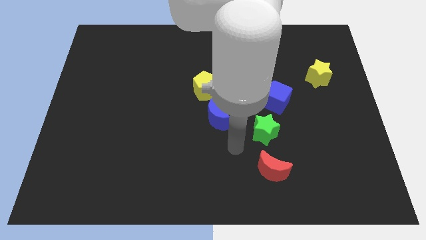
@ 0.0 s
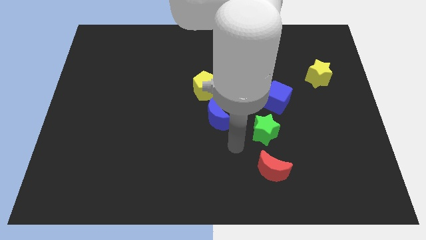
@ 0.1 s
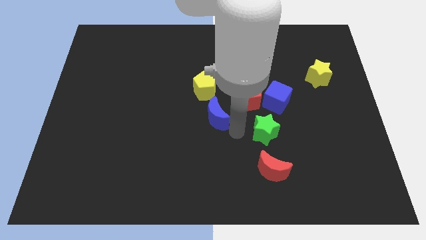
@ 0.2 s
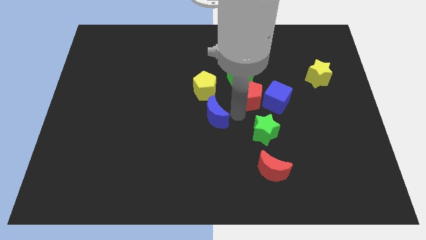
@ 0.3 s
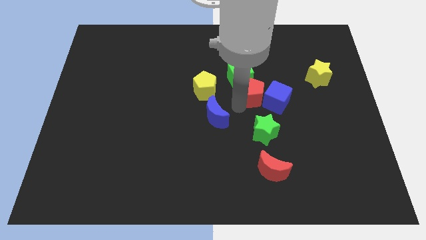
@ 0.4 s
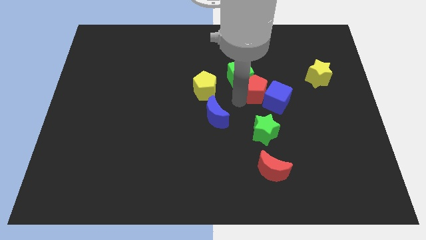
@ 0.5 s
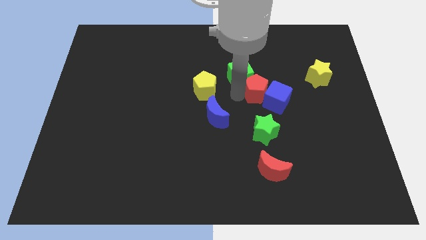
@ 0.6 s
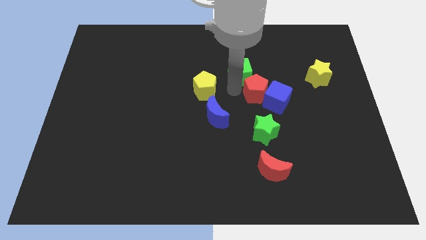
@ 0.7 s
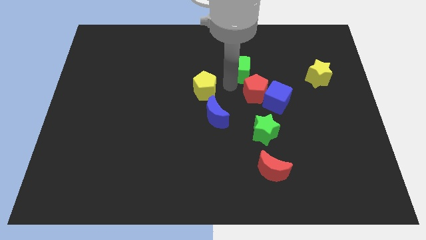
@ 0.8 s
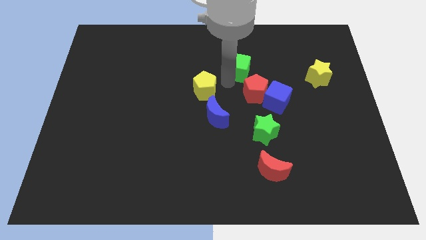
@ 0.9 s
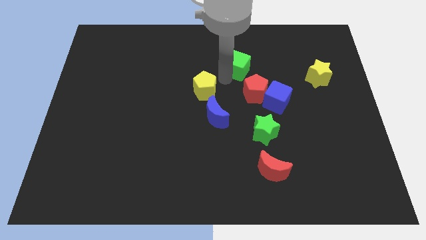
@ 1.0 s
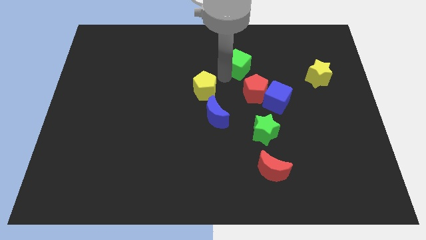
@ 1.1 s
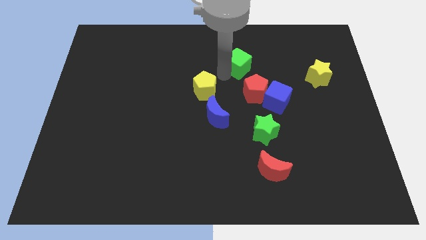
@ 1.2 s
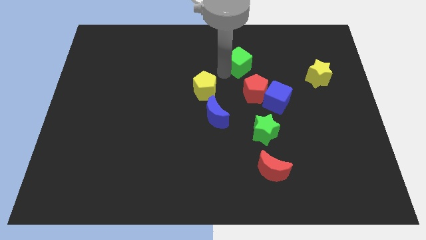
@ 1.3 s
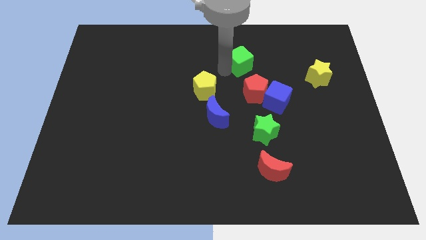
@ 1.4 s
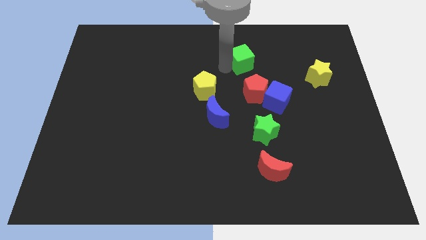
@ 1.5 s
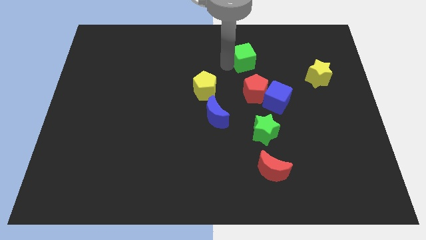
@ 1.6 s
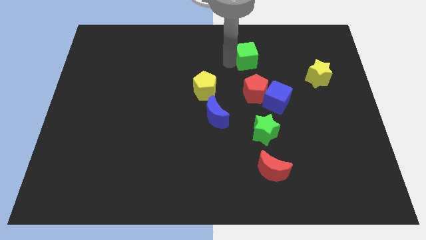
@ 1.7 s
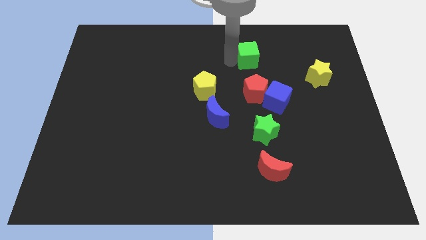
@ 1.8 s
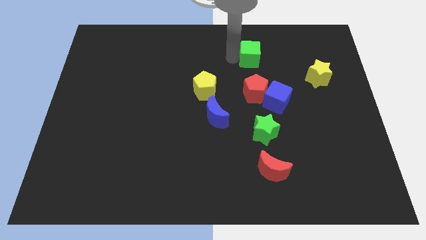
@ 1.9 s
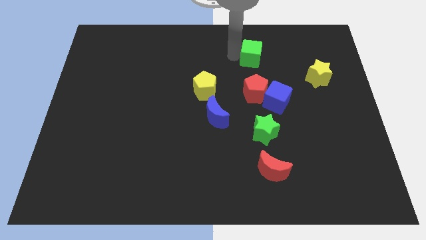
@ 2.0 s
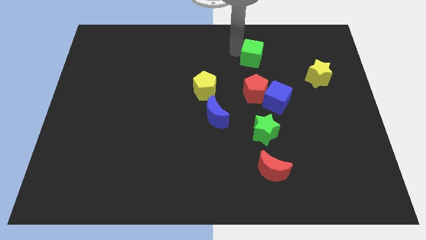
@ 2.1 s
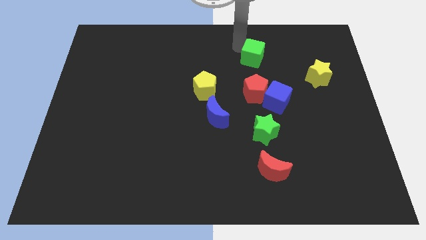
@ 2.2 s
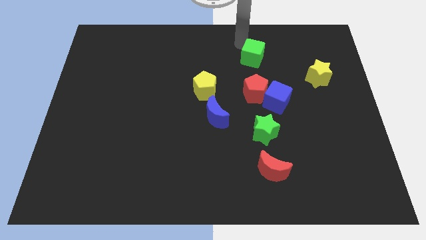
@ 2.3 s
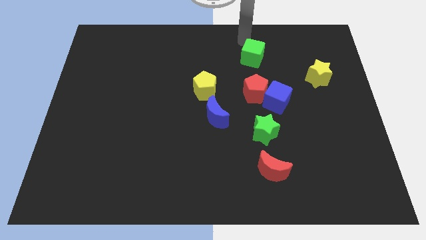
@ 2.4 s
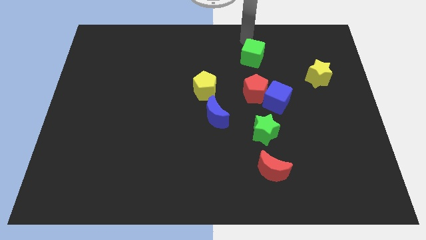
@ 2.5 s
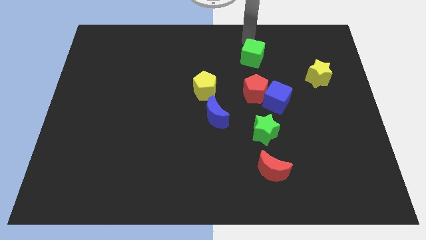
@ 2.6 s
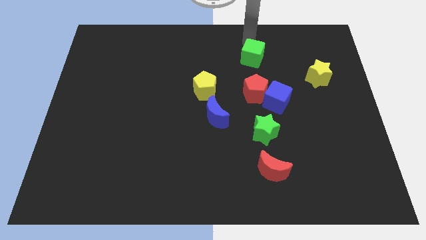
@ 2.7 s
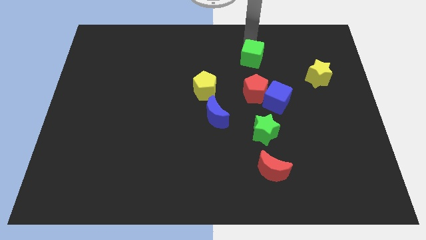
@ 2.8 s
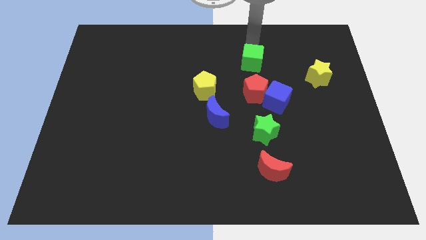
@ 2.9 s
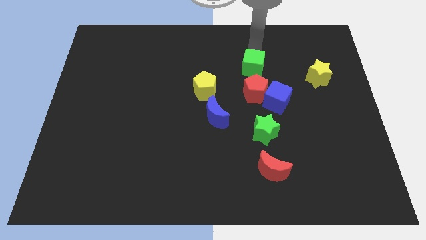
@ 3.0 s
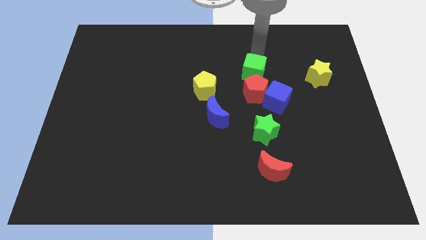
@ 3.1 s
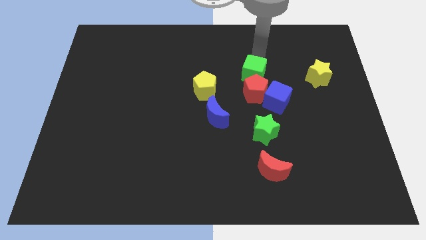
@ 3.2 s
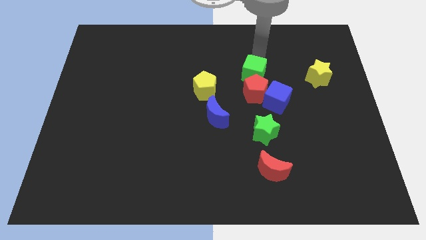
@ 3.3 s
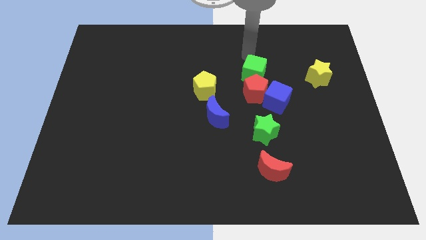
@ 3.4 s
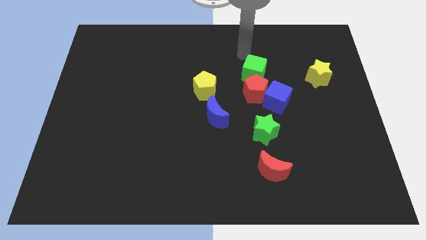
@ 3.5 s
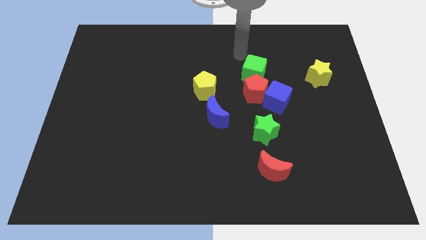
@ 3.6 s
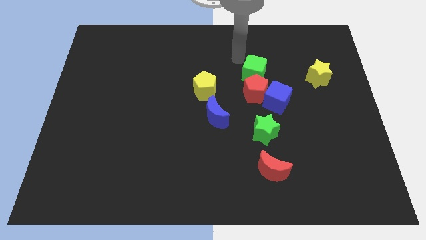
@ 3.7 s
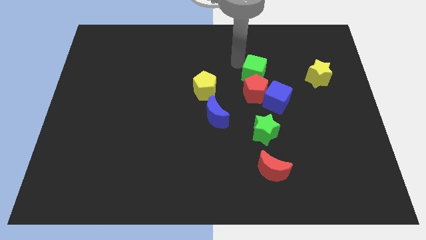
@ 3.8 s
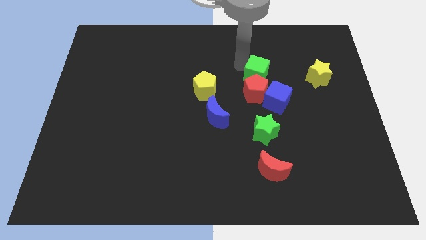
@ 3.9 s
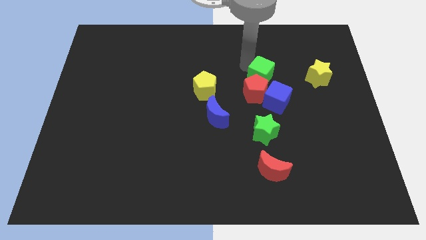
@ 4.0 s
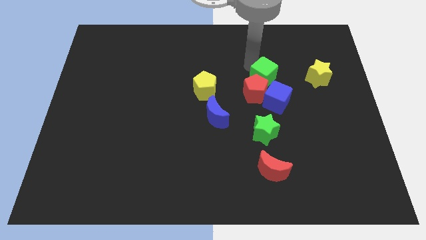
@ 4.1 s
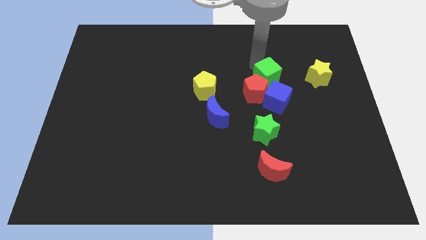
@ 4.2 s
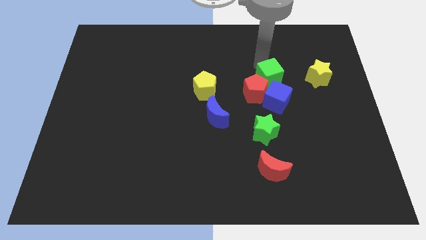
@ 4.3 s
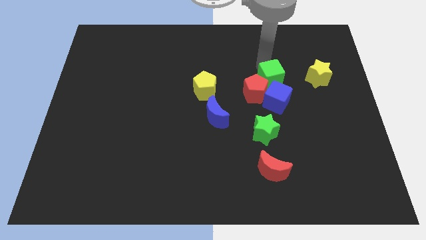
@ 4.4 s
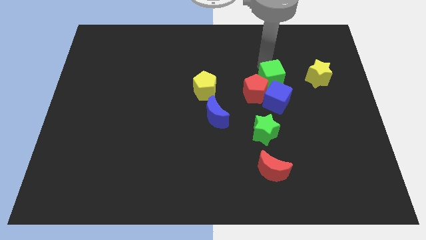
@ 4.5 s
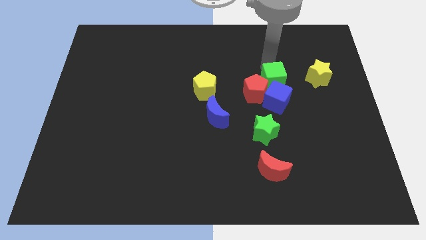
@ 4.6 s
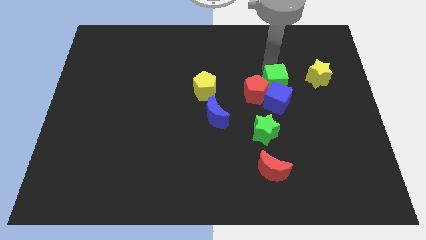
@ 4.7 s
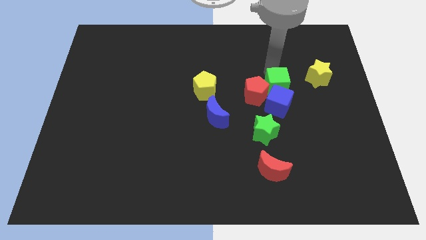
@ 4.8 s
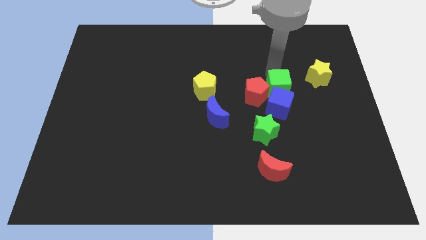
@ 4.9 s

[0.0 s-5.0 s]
put the green cube close to the blue cube

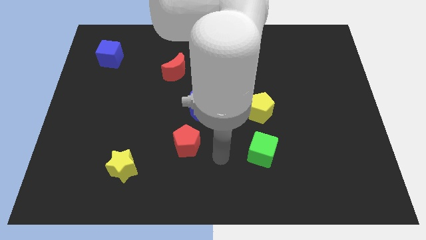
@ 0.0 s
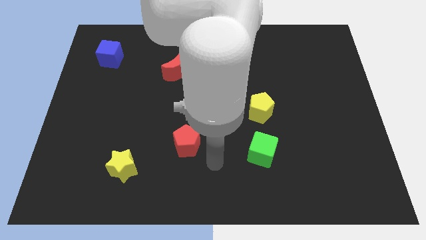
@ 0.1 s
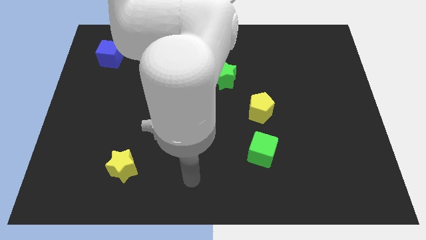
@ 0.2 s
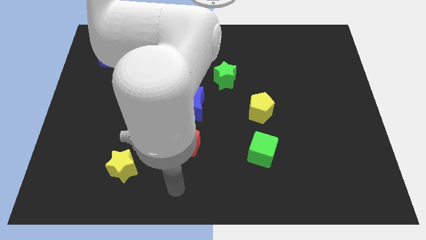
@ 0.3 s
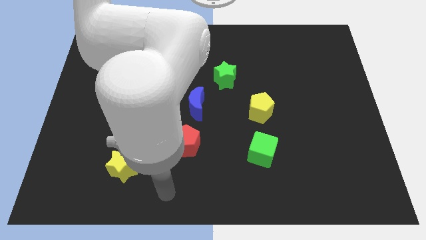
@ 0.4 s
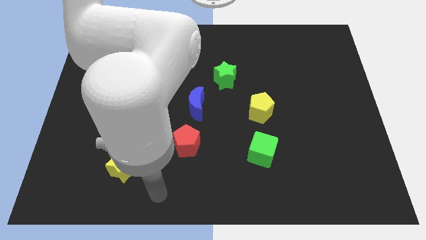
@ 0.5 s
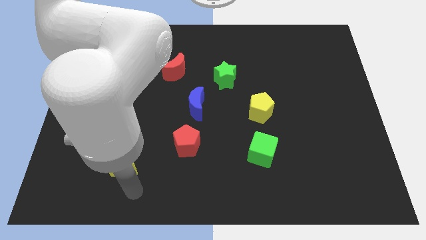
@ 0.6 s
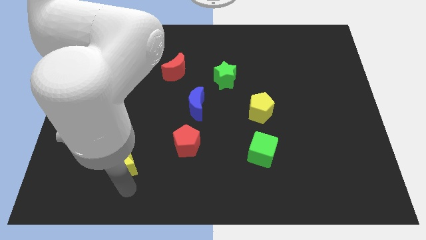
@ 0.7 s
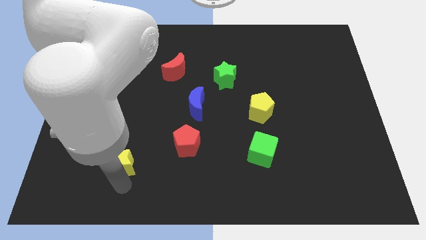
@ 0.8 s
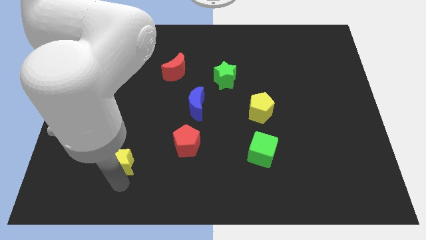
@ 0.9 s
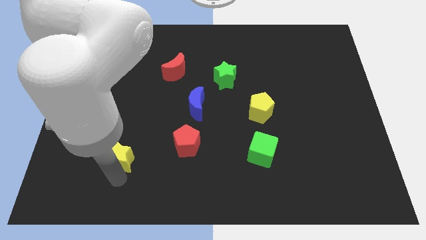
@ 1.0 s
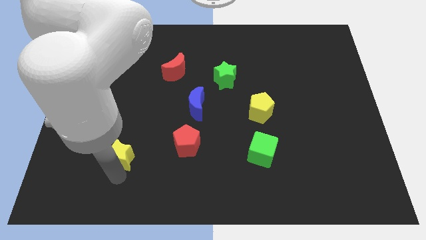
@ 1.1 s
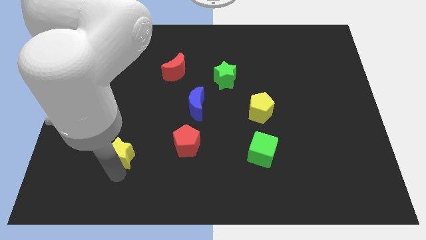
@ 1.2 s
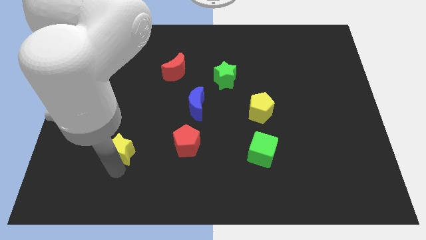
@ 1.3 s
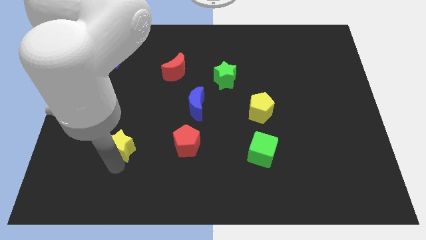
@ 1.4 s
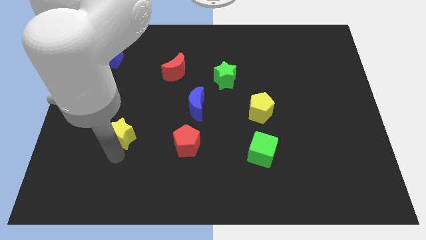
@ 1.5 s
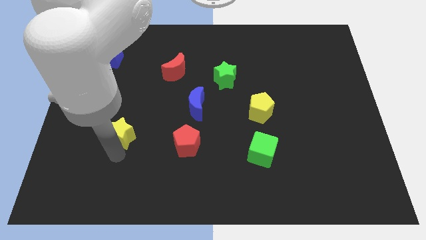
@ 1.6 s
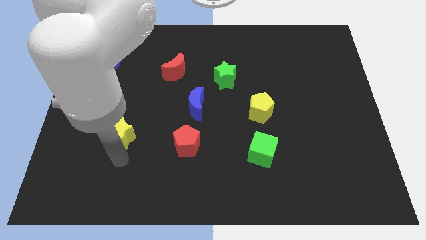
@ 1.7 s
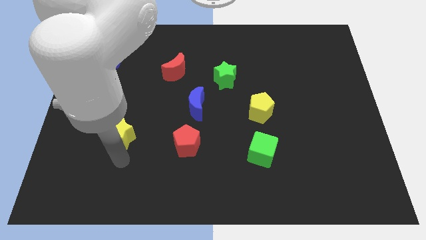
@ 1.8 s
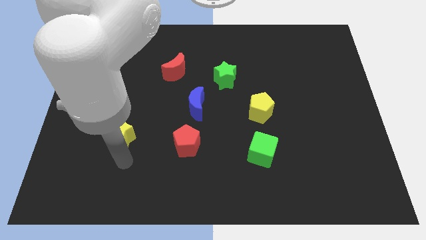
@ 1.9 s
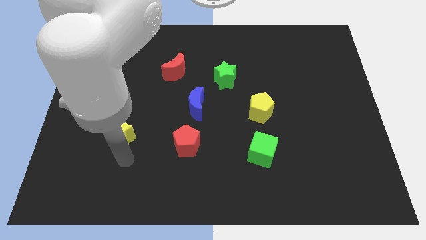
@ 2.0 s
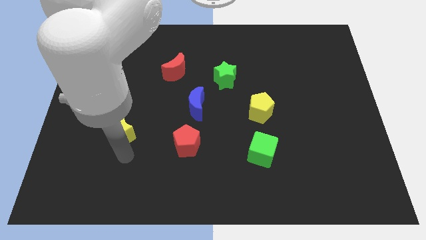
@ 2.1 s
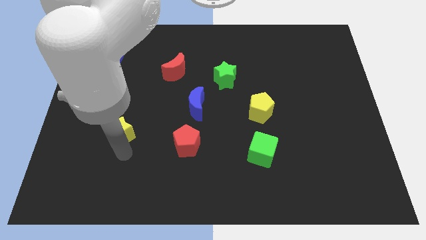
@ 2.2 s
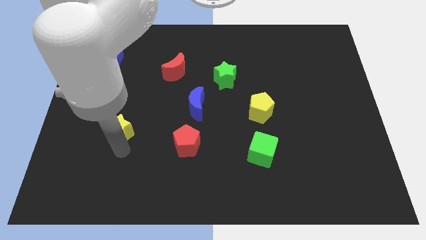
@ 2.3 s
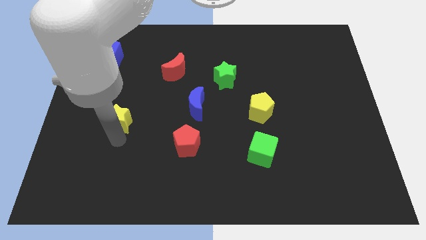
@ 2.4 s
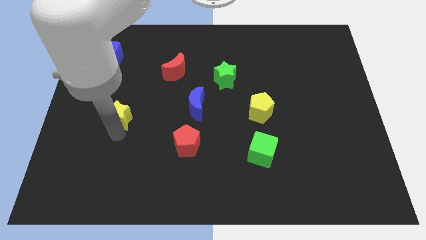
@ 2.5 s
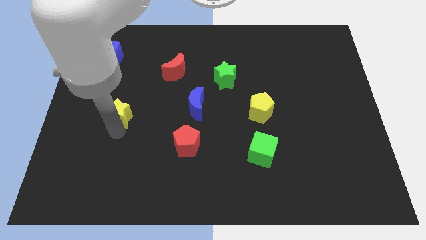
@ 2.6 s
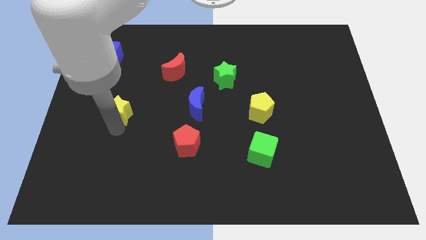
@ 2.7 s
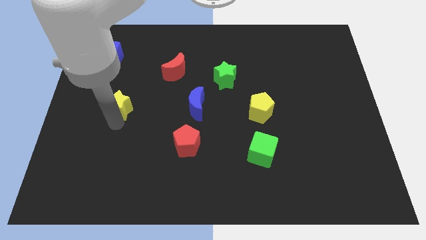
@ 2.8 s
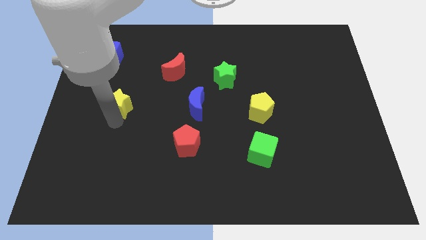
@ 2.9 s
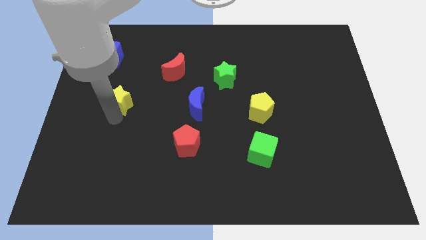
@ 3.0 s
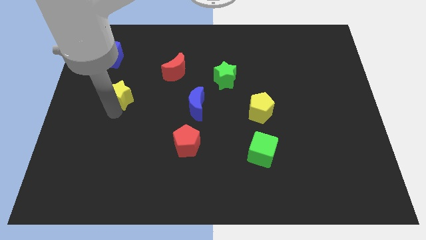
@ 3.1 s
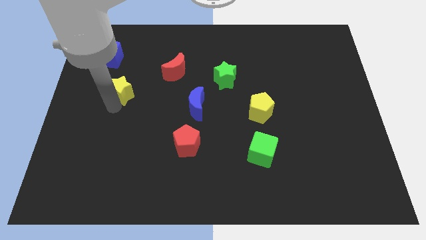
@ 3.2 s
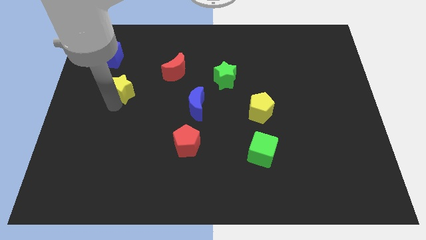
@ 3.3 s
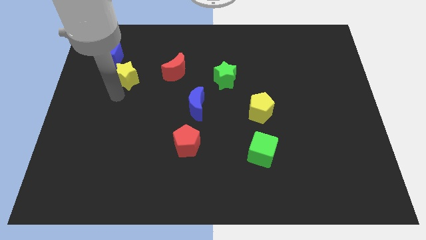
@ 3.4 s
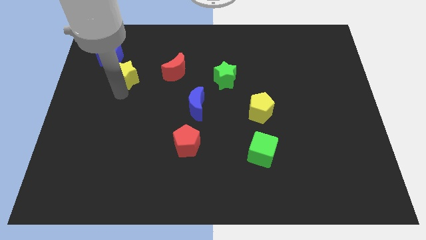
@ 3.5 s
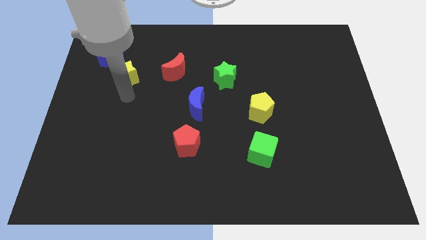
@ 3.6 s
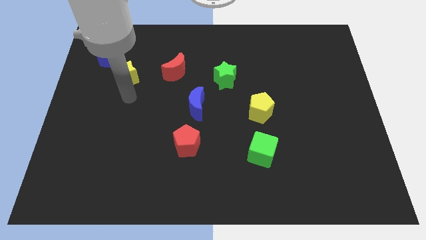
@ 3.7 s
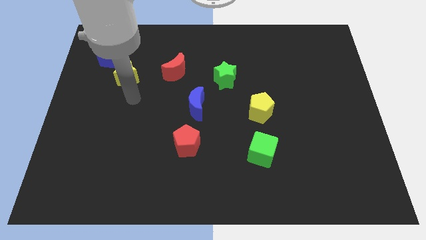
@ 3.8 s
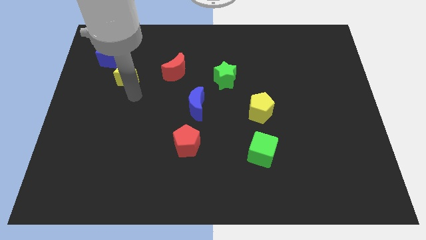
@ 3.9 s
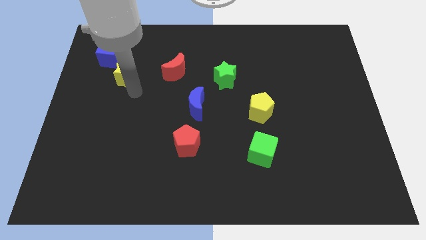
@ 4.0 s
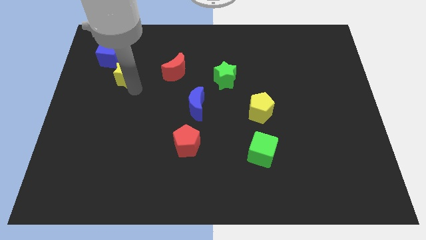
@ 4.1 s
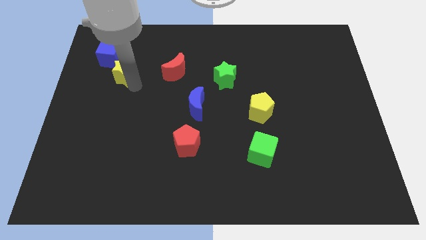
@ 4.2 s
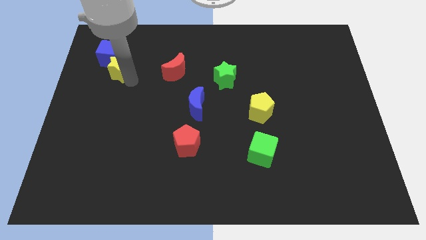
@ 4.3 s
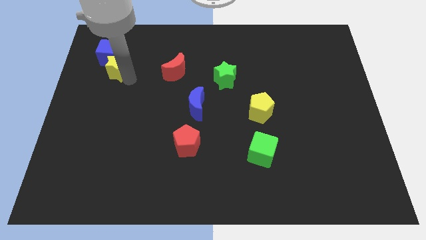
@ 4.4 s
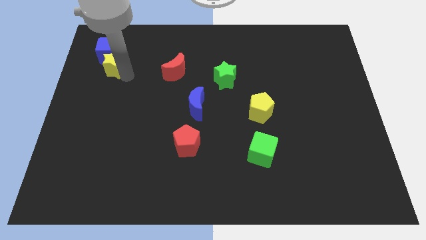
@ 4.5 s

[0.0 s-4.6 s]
put the yellow star towards the blue cube
